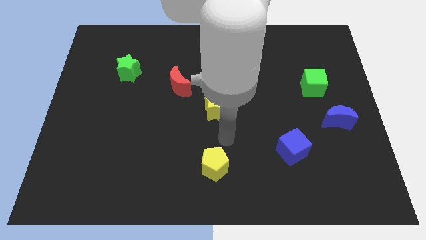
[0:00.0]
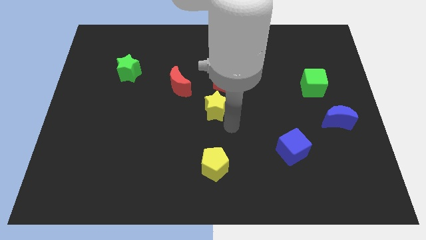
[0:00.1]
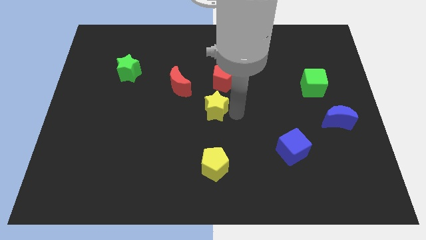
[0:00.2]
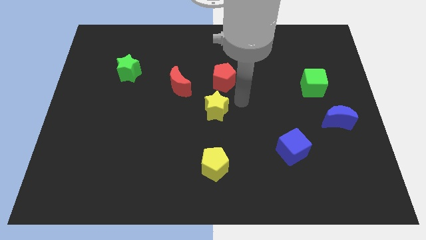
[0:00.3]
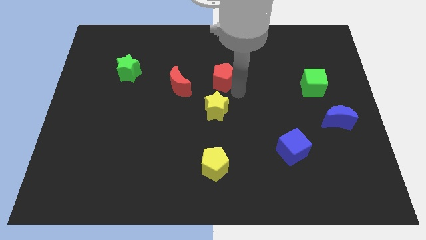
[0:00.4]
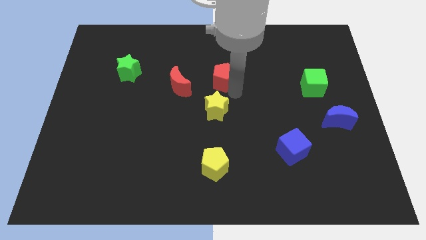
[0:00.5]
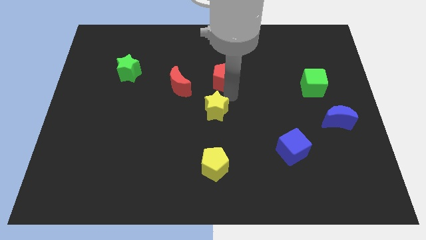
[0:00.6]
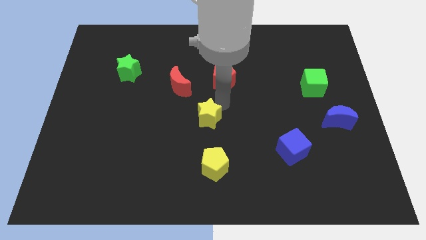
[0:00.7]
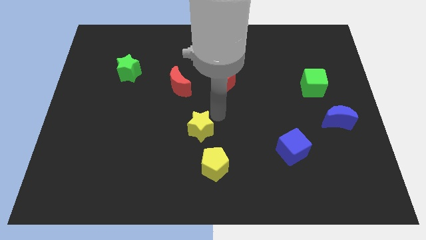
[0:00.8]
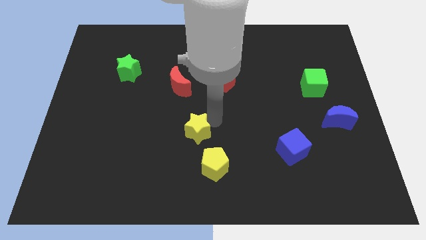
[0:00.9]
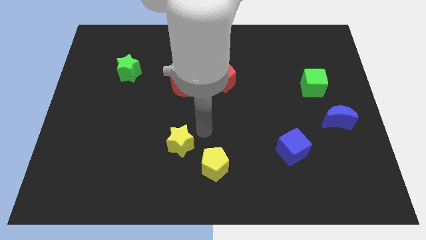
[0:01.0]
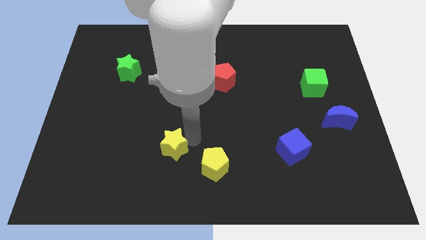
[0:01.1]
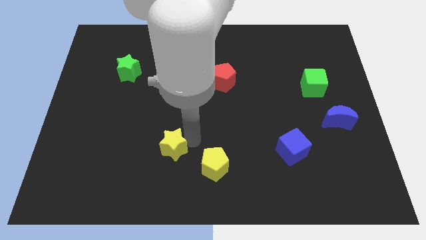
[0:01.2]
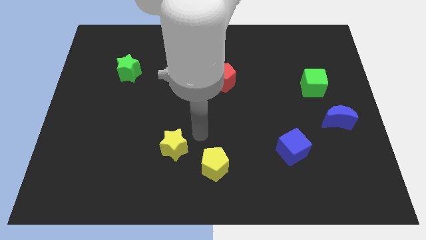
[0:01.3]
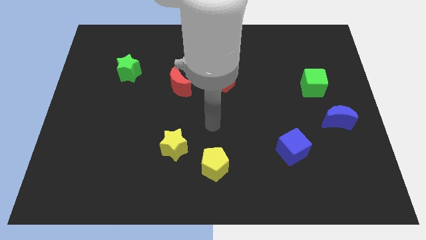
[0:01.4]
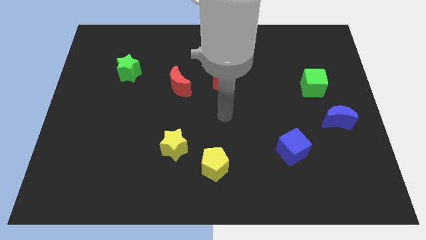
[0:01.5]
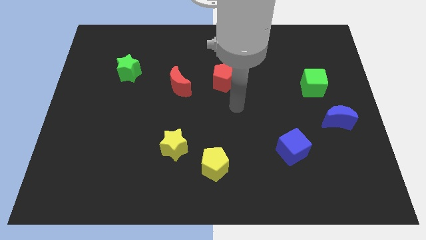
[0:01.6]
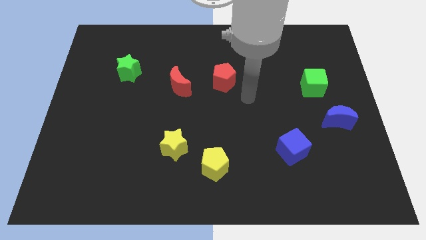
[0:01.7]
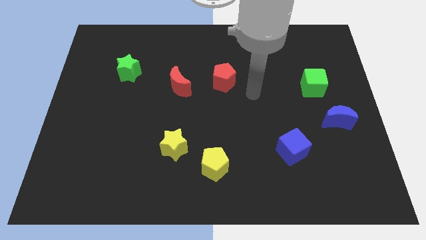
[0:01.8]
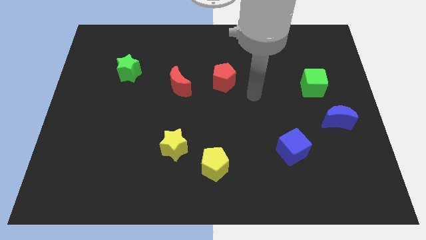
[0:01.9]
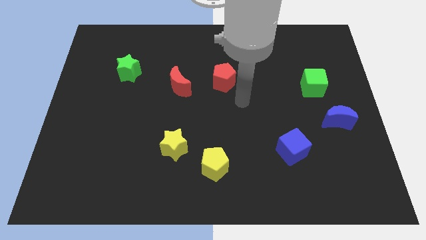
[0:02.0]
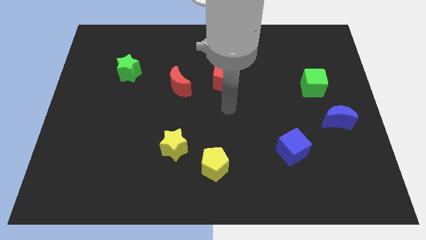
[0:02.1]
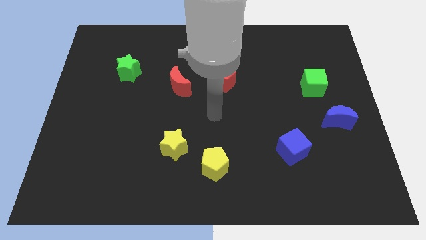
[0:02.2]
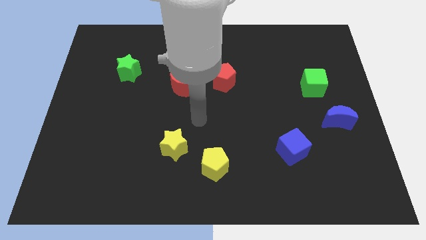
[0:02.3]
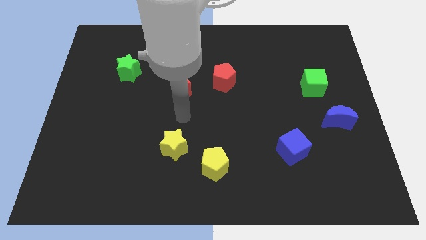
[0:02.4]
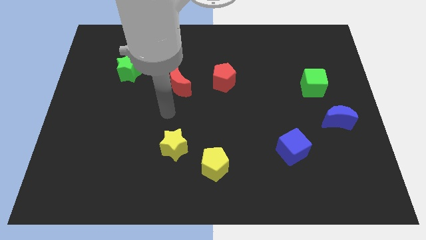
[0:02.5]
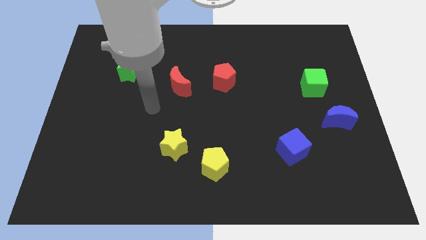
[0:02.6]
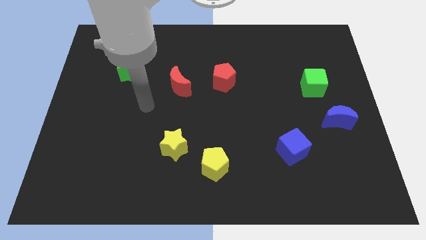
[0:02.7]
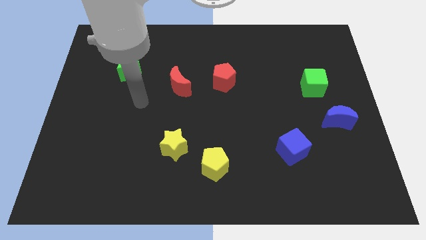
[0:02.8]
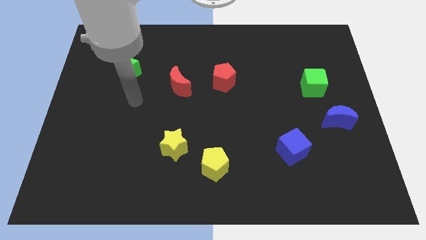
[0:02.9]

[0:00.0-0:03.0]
push the yellow star to the top left of the yellow pentagon

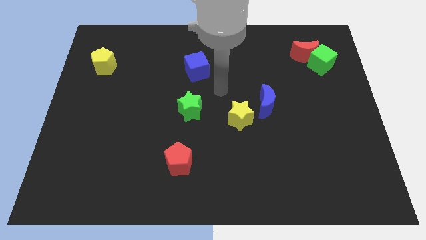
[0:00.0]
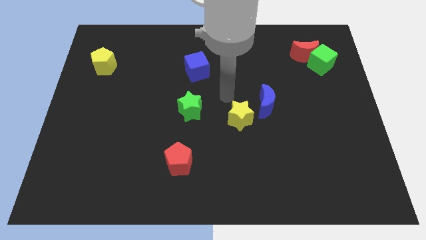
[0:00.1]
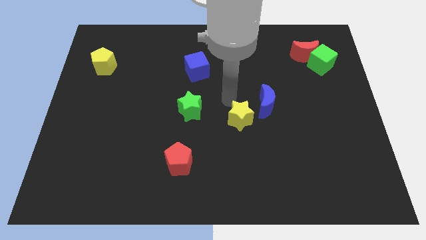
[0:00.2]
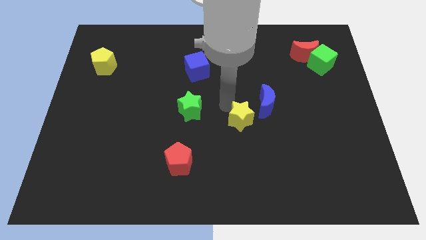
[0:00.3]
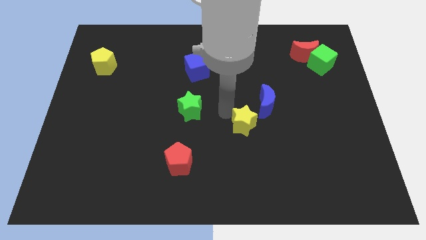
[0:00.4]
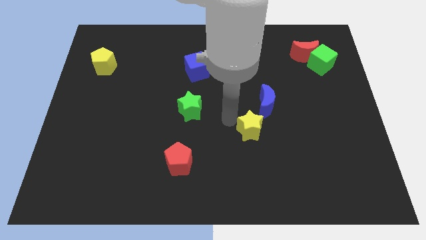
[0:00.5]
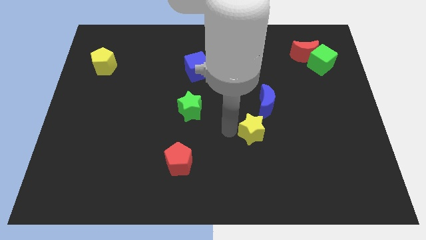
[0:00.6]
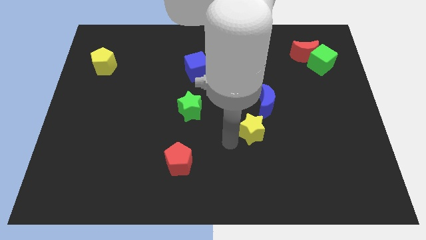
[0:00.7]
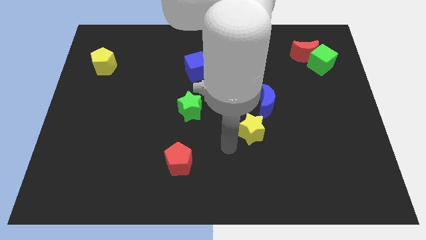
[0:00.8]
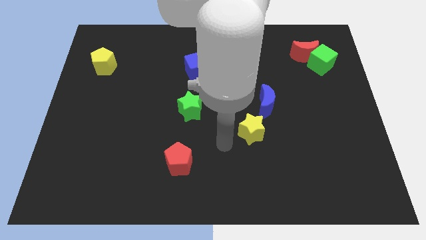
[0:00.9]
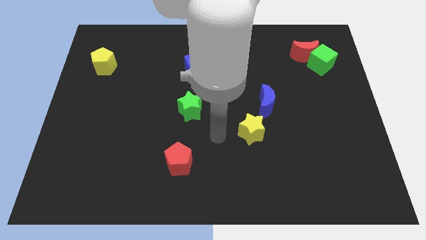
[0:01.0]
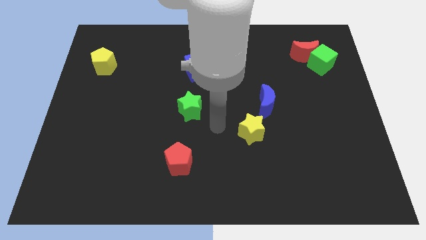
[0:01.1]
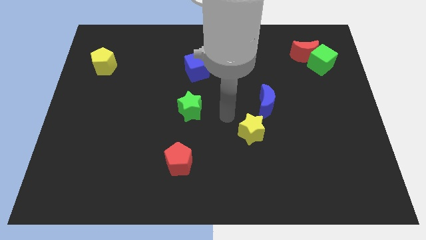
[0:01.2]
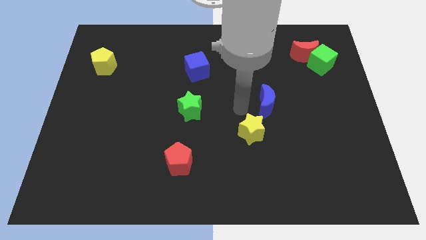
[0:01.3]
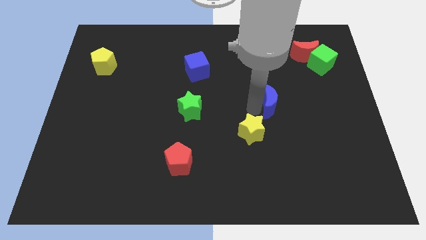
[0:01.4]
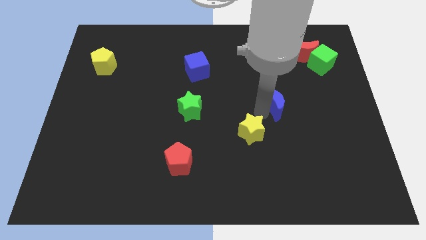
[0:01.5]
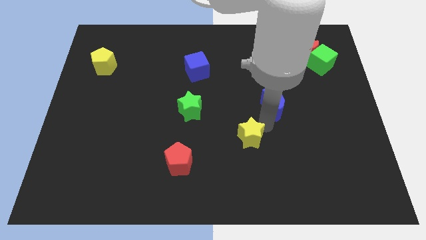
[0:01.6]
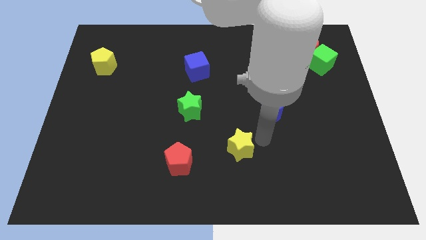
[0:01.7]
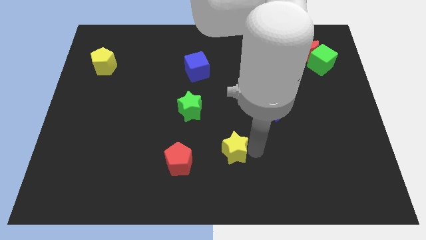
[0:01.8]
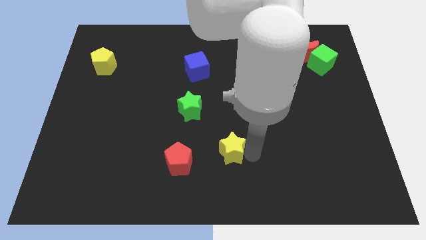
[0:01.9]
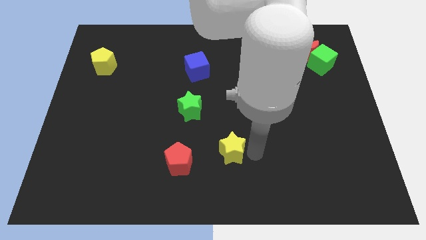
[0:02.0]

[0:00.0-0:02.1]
place the yellow star to the bottom left of the blue moon

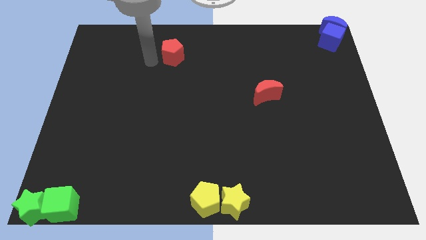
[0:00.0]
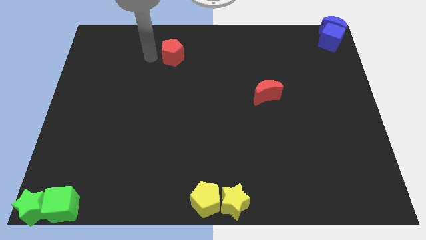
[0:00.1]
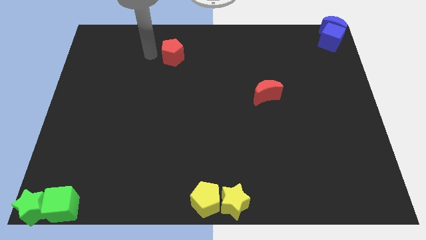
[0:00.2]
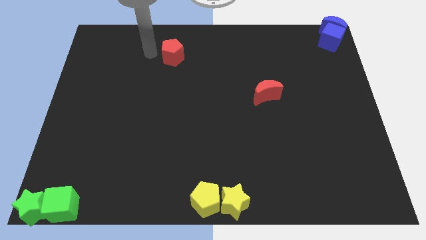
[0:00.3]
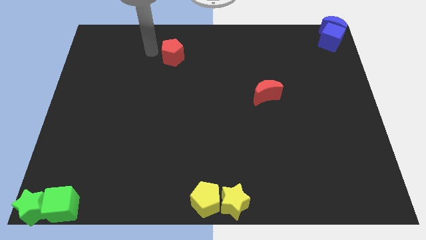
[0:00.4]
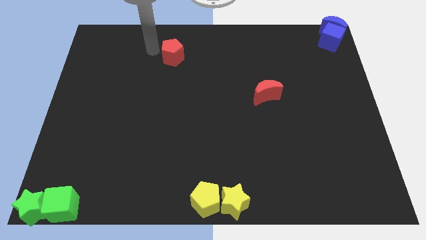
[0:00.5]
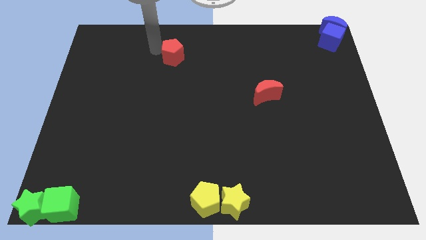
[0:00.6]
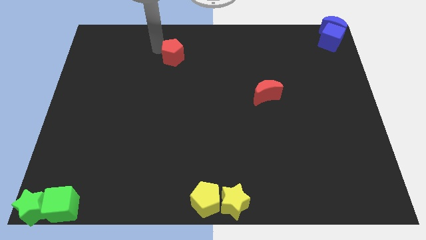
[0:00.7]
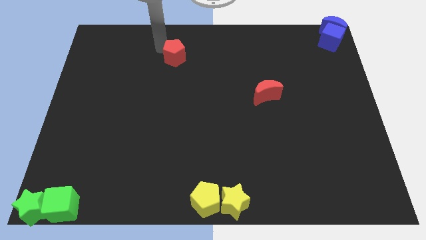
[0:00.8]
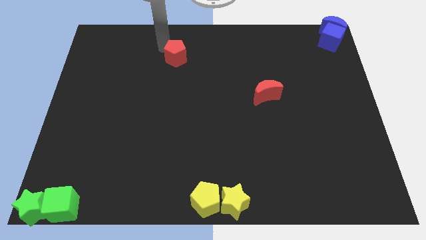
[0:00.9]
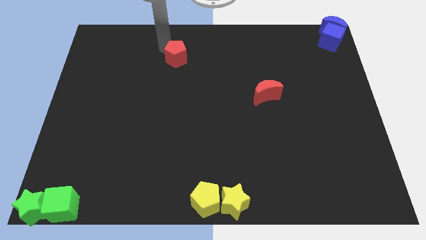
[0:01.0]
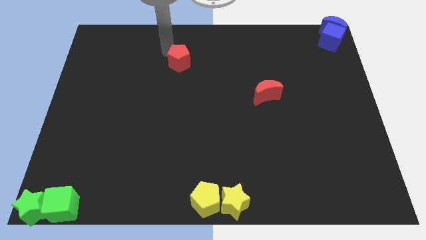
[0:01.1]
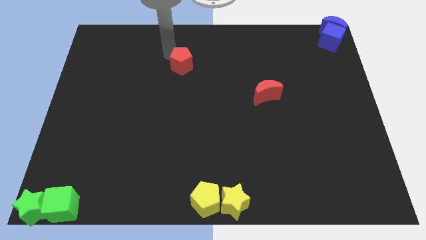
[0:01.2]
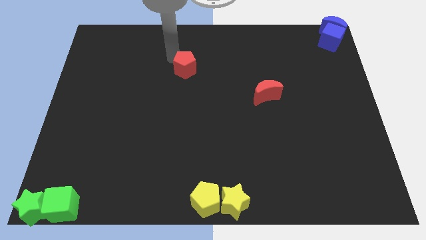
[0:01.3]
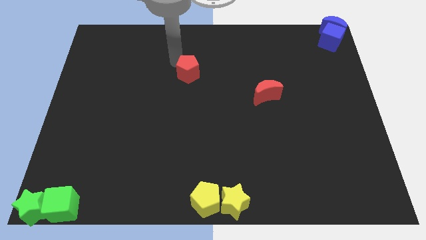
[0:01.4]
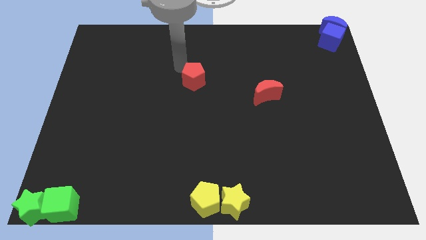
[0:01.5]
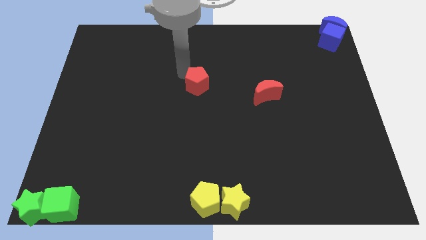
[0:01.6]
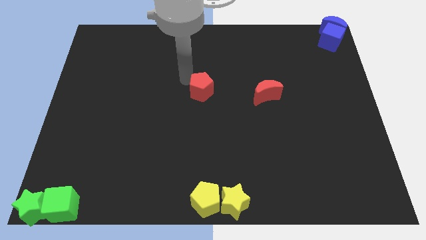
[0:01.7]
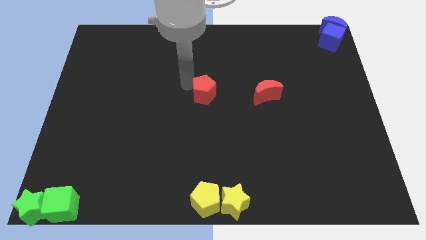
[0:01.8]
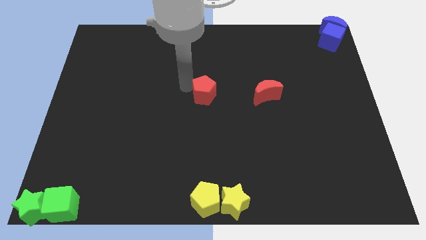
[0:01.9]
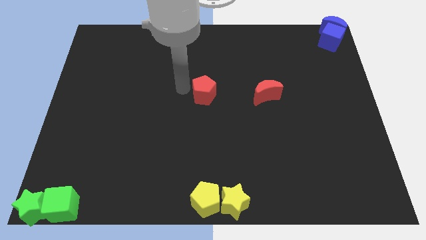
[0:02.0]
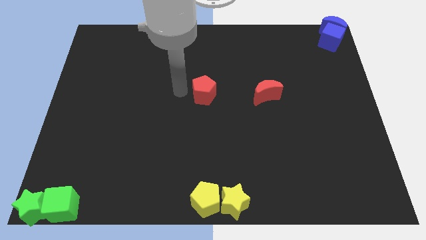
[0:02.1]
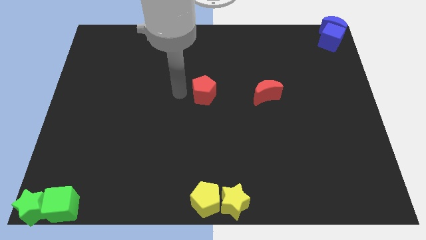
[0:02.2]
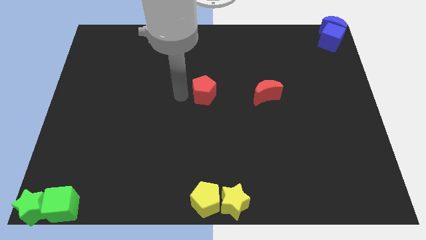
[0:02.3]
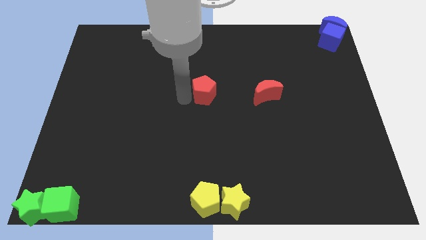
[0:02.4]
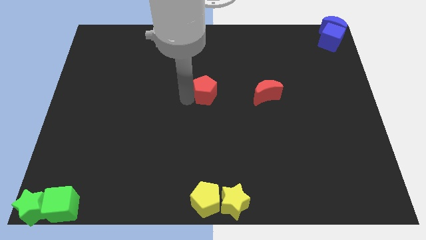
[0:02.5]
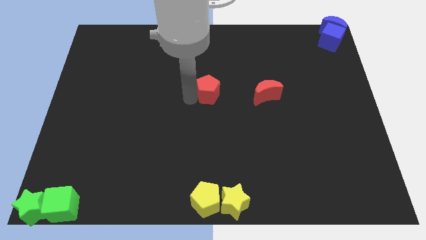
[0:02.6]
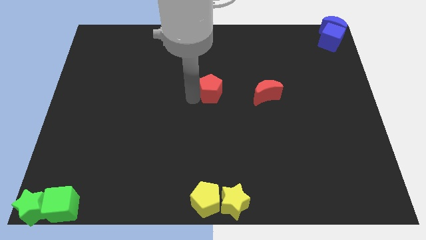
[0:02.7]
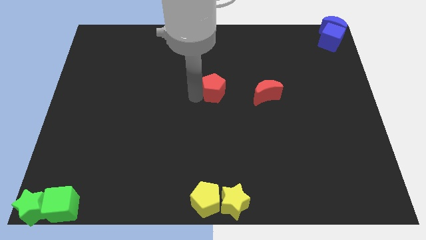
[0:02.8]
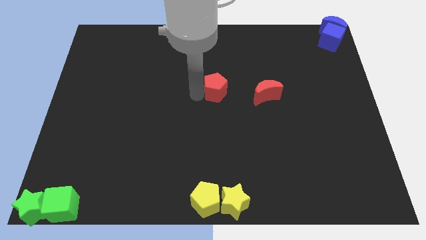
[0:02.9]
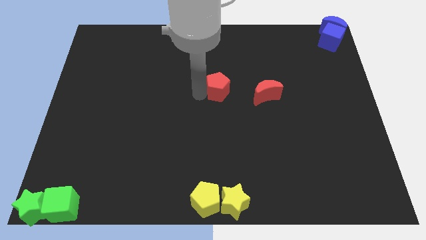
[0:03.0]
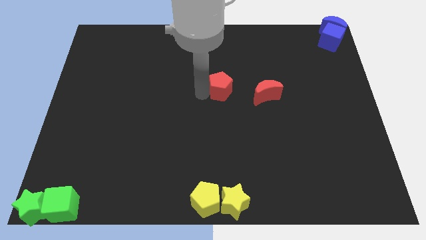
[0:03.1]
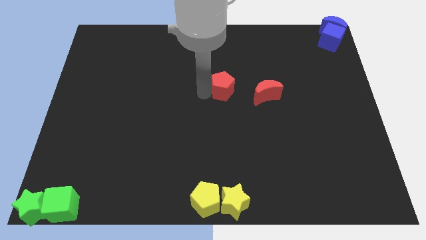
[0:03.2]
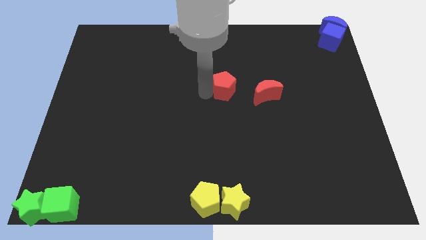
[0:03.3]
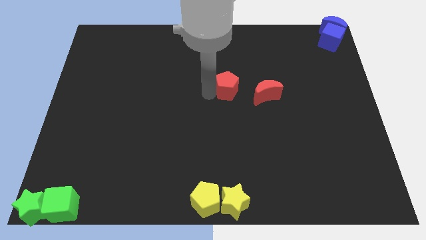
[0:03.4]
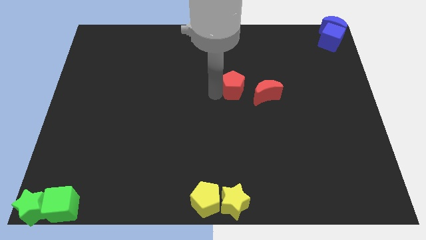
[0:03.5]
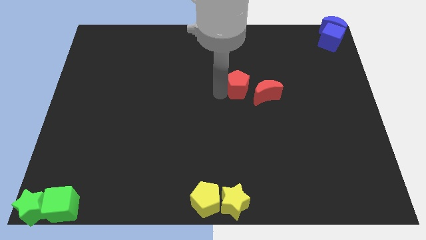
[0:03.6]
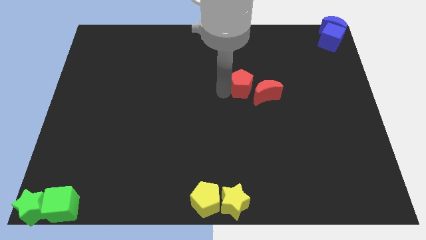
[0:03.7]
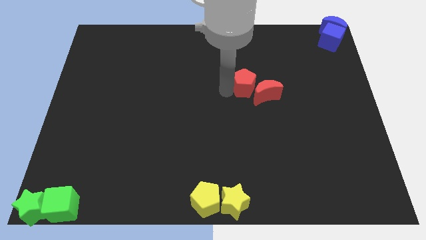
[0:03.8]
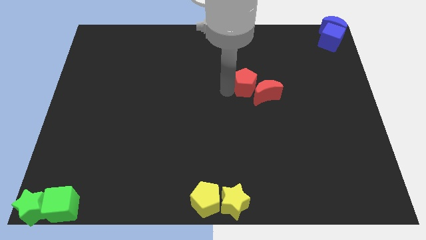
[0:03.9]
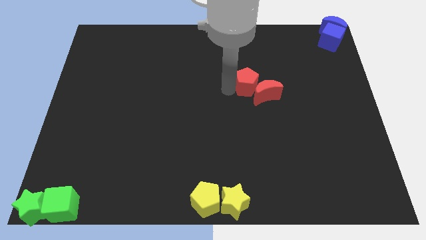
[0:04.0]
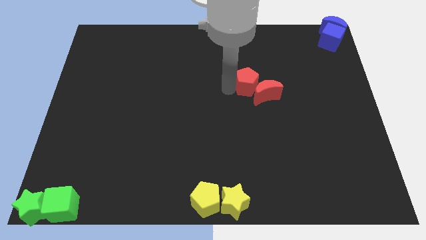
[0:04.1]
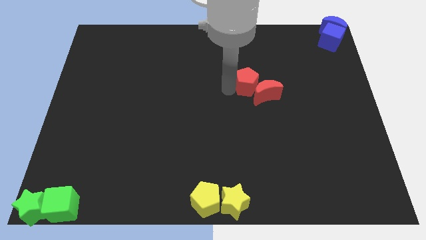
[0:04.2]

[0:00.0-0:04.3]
move the red pentagon close to the red moon
